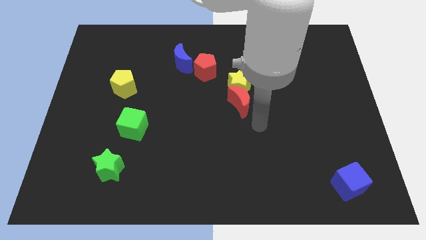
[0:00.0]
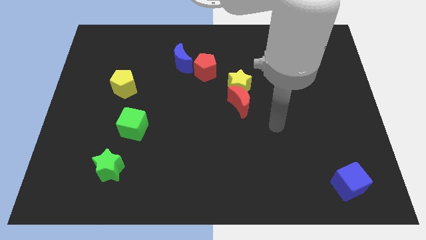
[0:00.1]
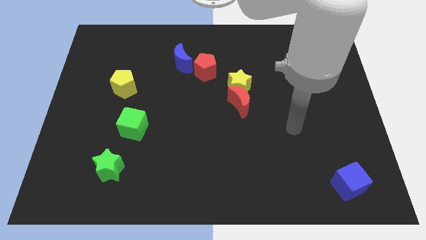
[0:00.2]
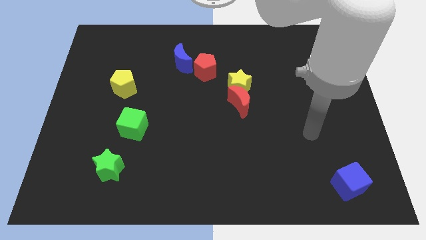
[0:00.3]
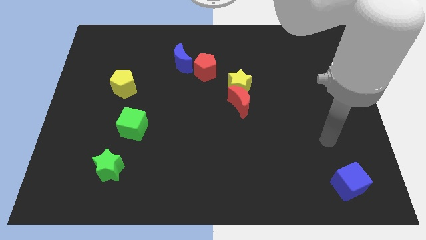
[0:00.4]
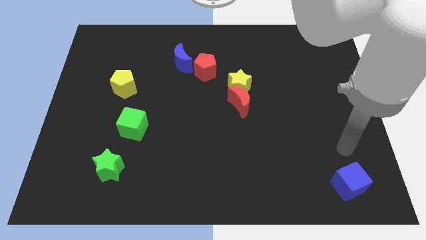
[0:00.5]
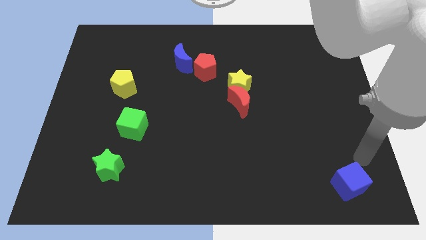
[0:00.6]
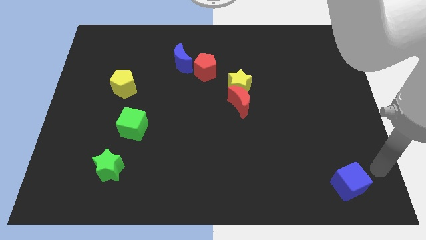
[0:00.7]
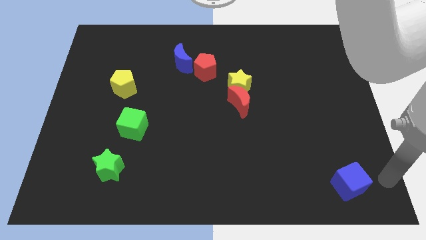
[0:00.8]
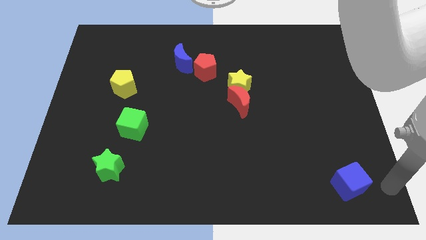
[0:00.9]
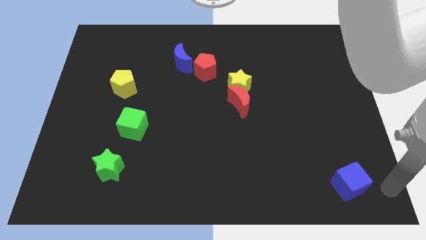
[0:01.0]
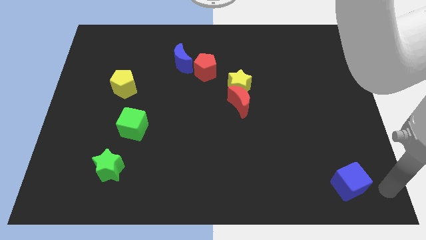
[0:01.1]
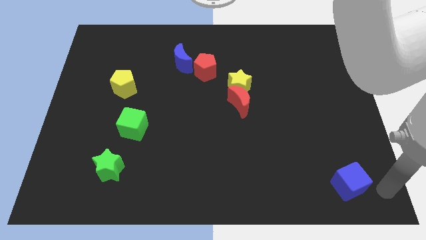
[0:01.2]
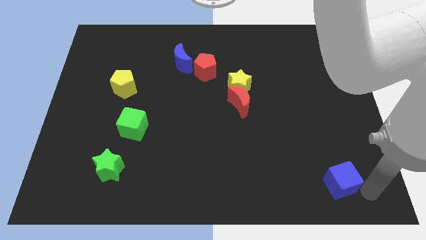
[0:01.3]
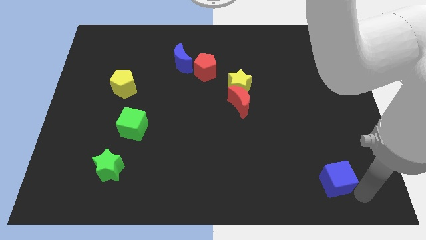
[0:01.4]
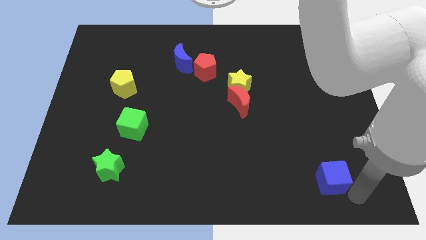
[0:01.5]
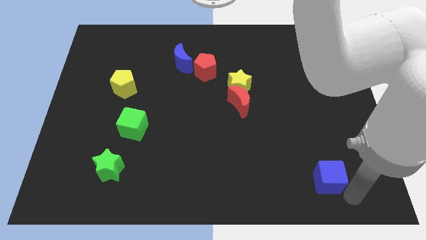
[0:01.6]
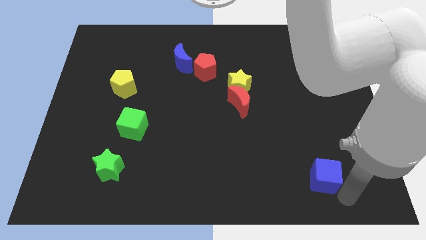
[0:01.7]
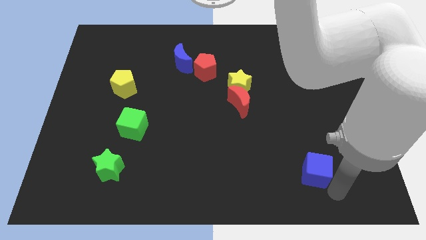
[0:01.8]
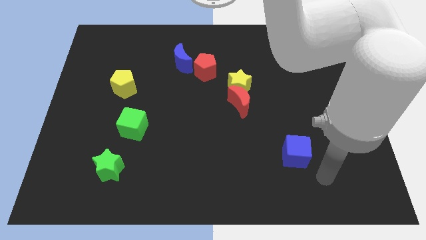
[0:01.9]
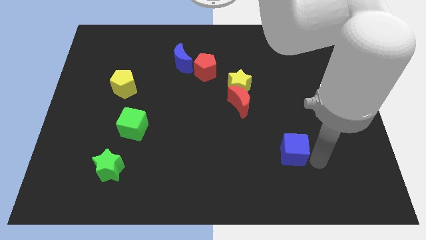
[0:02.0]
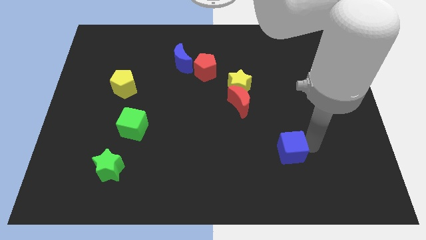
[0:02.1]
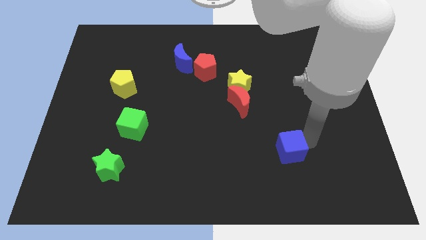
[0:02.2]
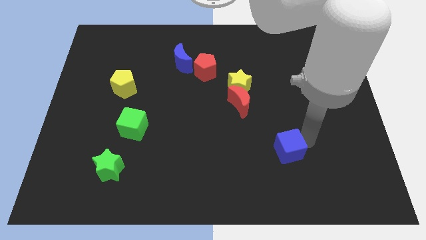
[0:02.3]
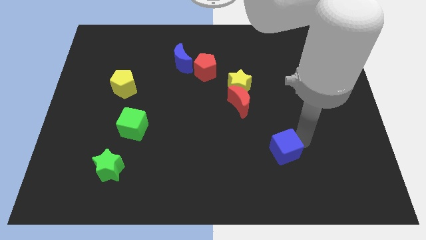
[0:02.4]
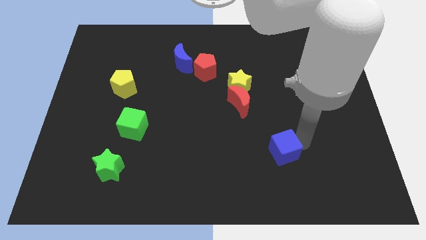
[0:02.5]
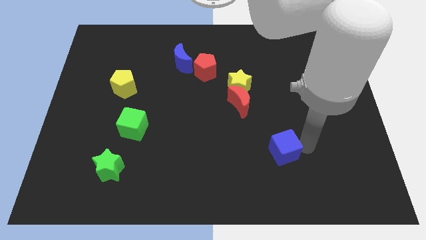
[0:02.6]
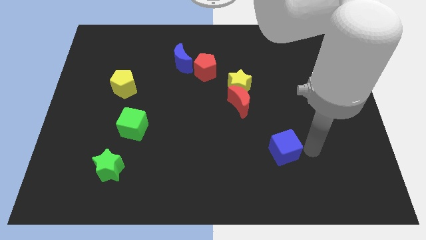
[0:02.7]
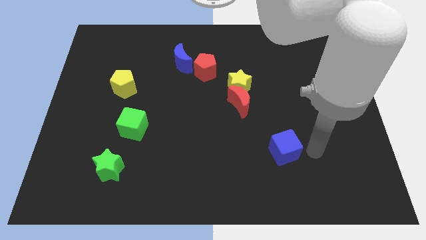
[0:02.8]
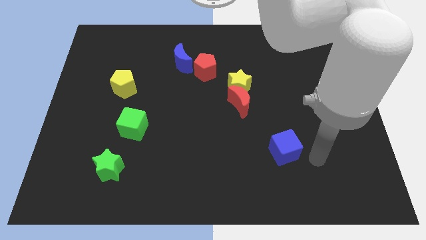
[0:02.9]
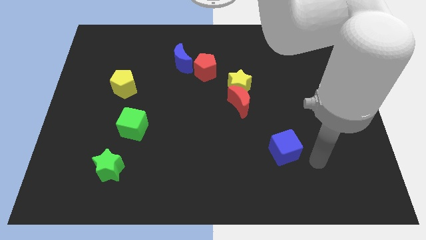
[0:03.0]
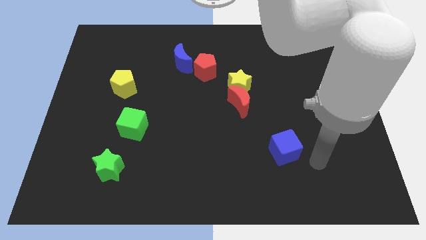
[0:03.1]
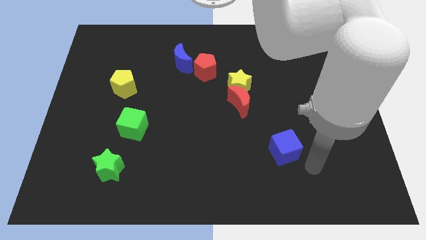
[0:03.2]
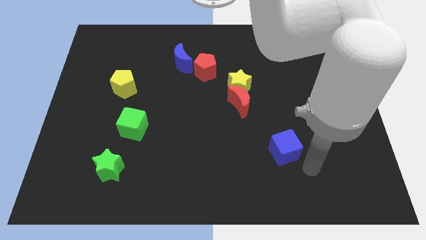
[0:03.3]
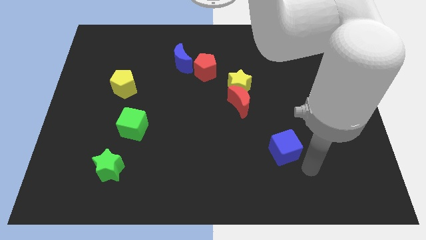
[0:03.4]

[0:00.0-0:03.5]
move blue cube diagonally upwards

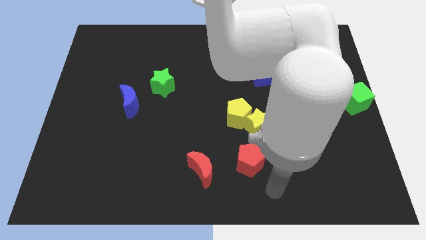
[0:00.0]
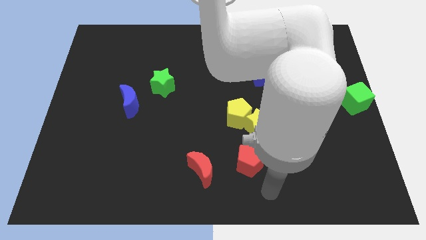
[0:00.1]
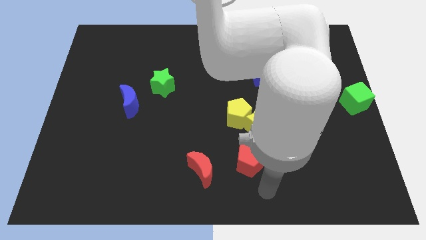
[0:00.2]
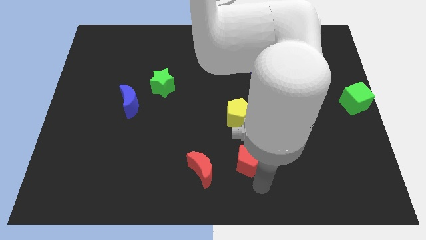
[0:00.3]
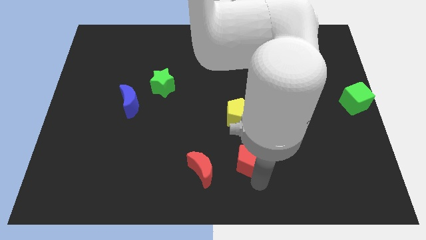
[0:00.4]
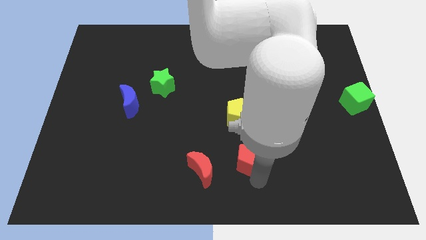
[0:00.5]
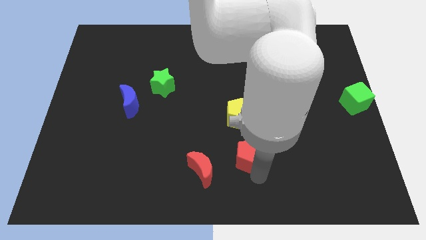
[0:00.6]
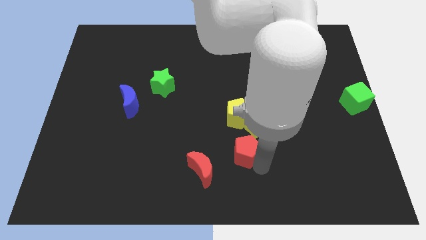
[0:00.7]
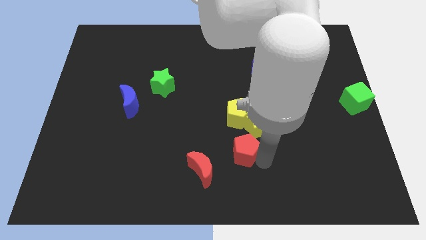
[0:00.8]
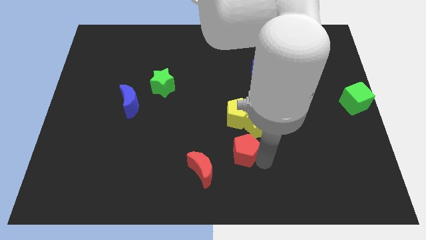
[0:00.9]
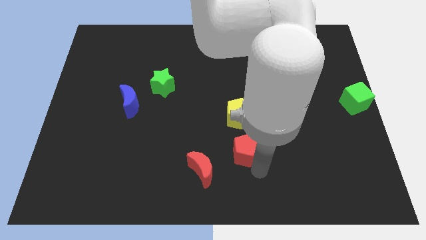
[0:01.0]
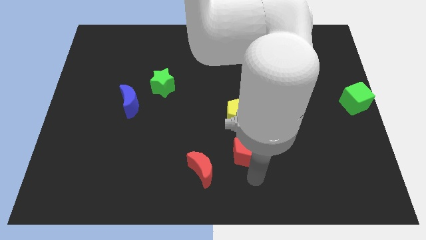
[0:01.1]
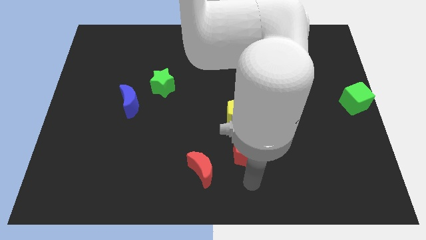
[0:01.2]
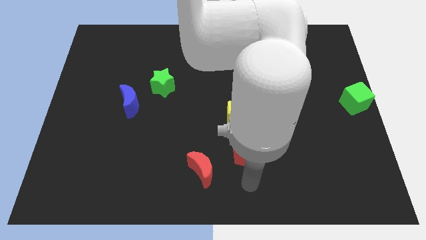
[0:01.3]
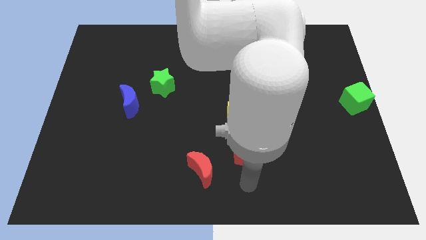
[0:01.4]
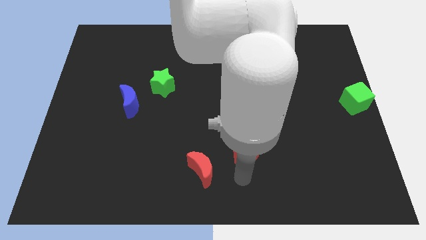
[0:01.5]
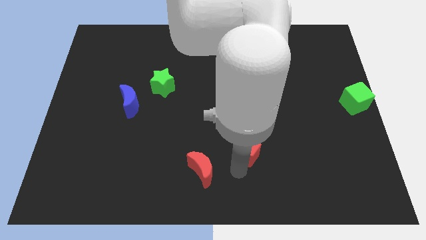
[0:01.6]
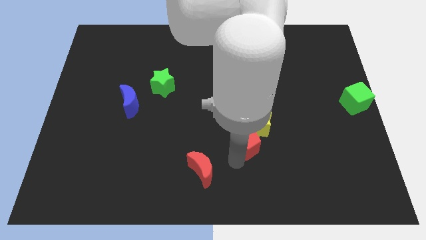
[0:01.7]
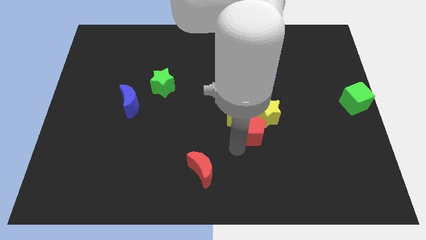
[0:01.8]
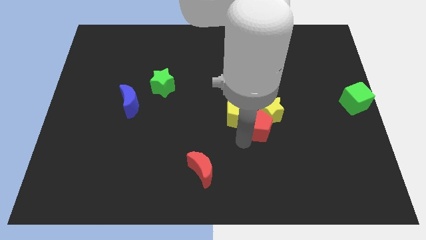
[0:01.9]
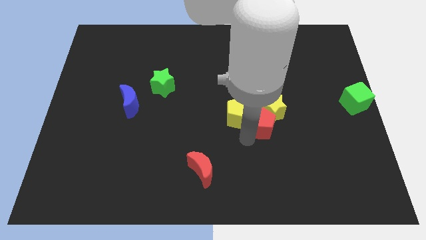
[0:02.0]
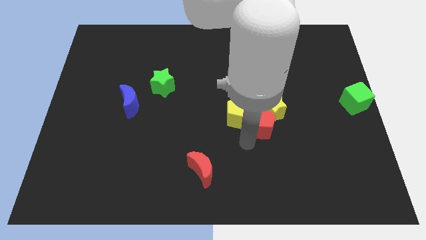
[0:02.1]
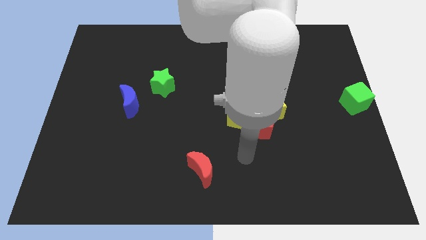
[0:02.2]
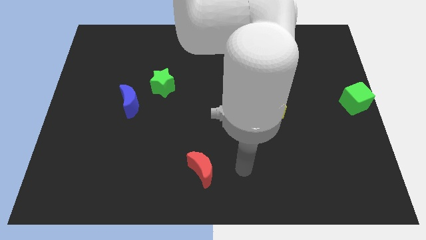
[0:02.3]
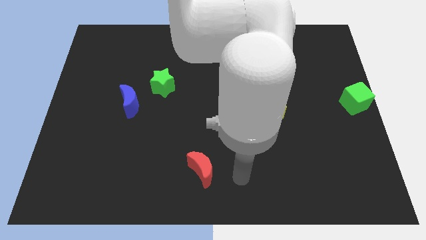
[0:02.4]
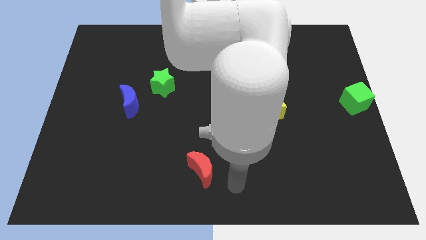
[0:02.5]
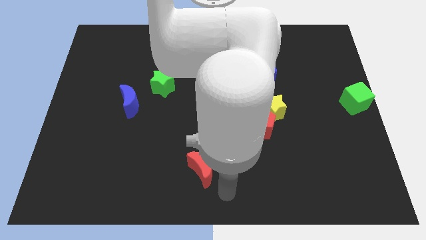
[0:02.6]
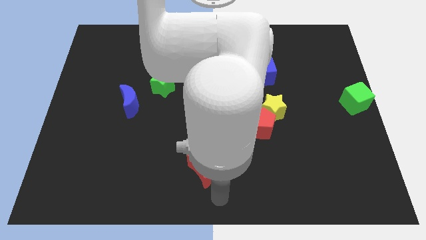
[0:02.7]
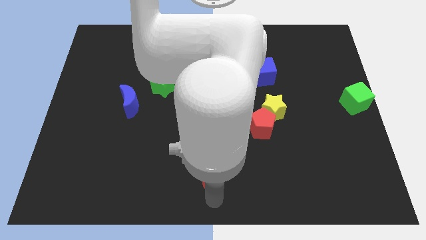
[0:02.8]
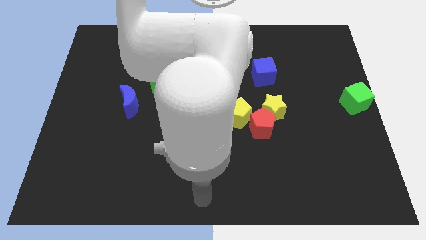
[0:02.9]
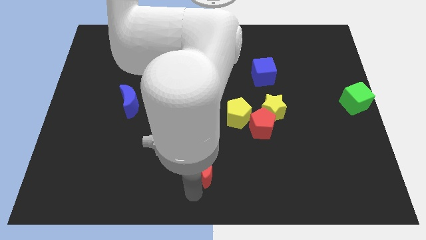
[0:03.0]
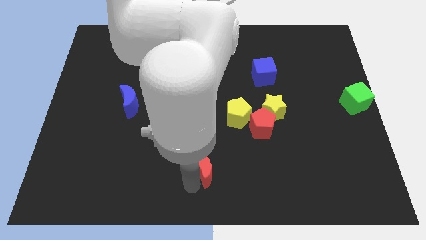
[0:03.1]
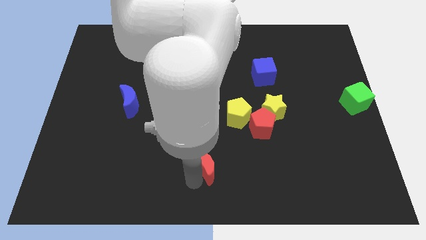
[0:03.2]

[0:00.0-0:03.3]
separate the yellow star and the yellow pentagon

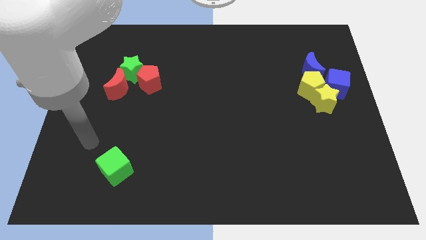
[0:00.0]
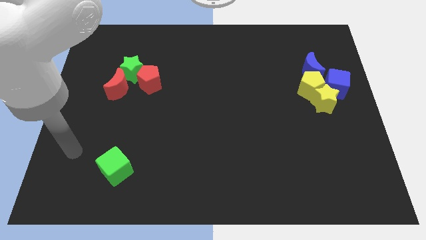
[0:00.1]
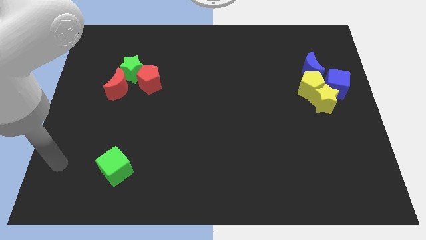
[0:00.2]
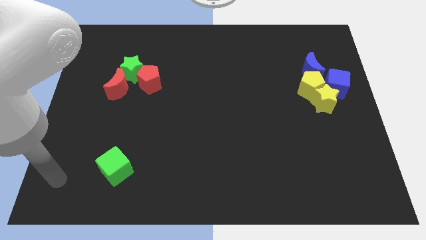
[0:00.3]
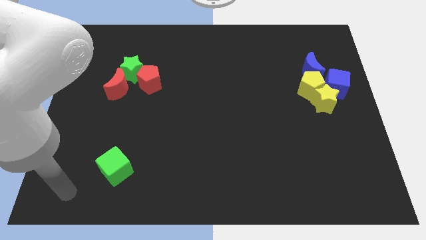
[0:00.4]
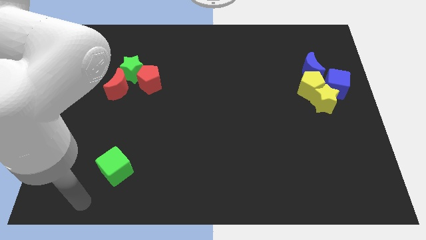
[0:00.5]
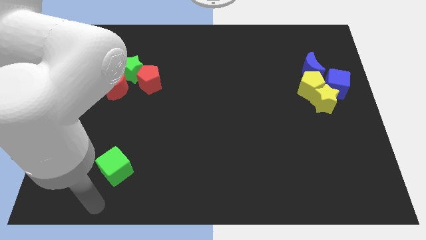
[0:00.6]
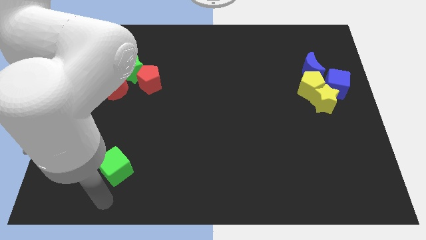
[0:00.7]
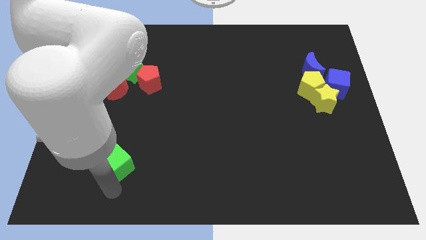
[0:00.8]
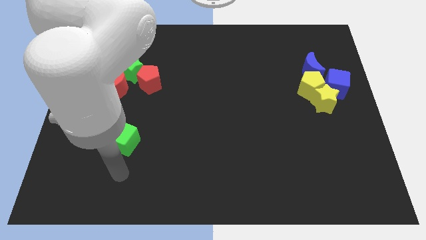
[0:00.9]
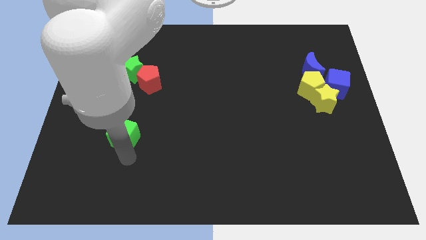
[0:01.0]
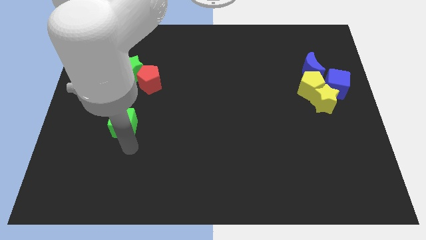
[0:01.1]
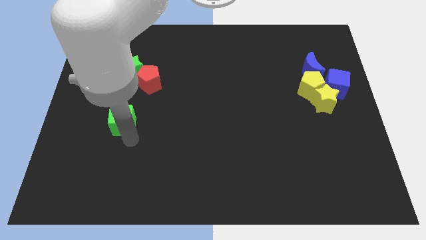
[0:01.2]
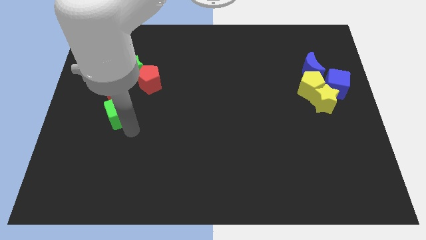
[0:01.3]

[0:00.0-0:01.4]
push the green cube towards the red crescent

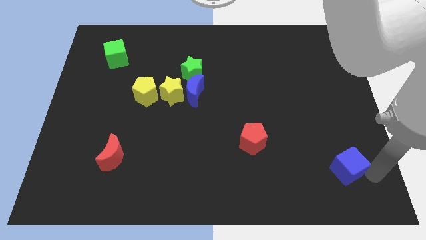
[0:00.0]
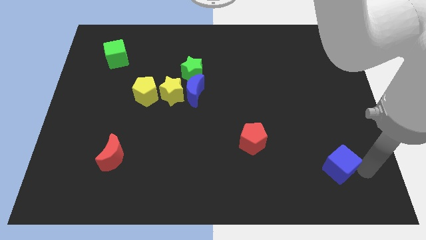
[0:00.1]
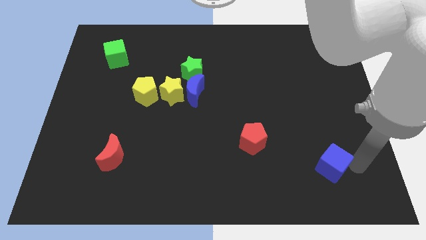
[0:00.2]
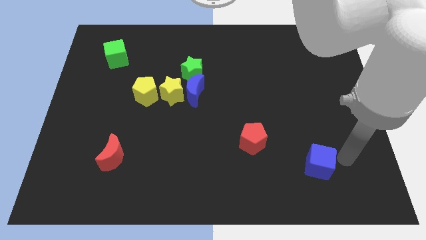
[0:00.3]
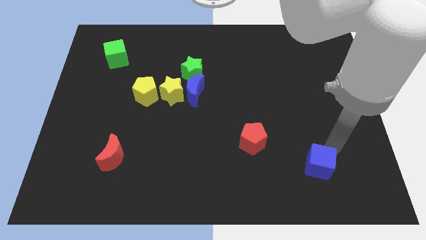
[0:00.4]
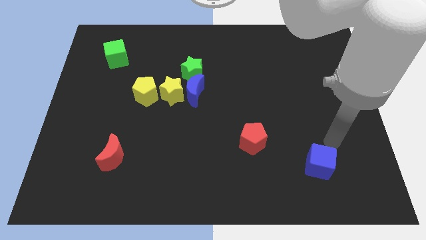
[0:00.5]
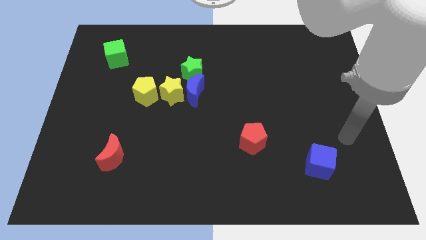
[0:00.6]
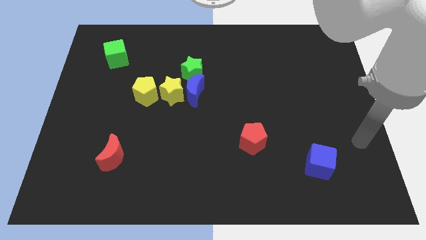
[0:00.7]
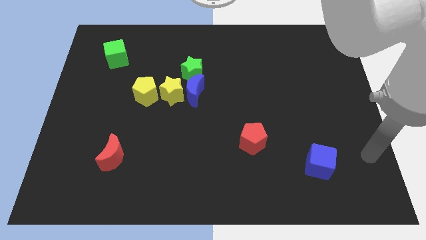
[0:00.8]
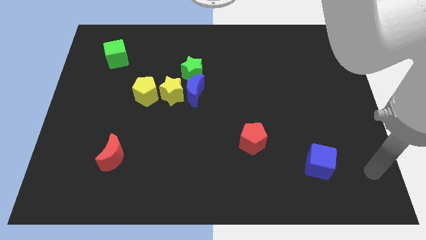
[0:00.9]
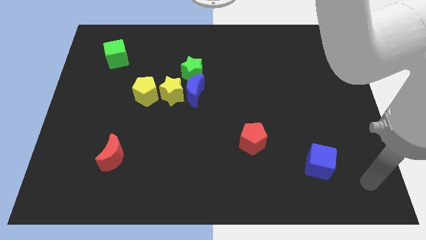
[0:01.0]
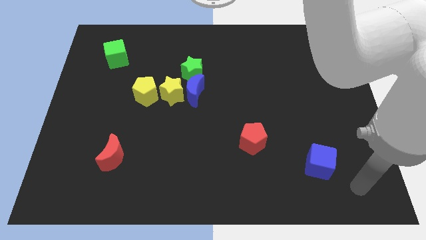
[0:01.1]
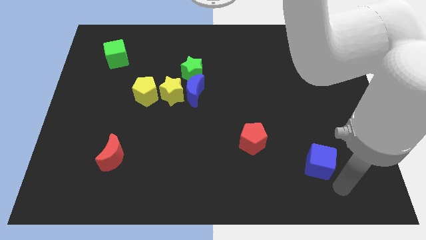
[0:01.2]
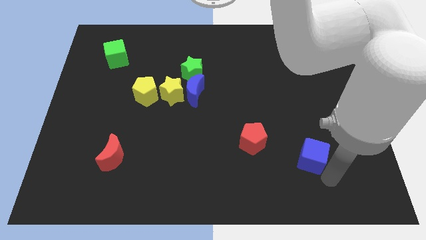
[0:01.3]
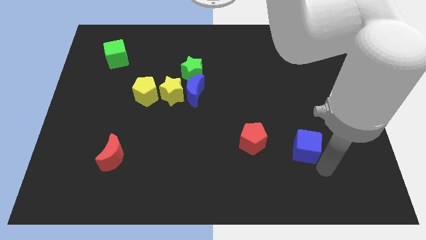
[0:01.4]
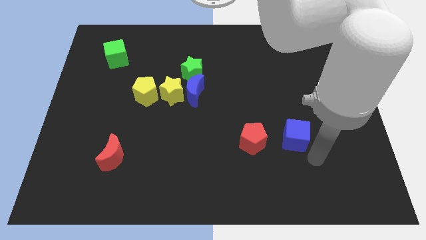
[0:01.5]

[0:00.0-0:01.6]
move the blue cube to the right side of the red pentagon
